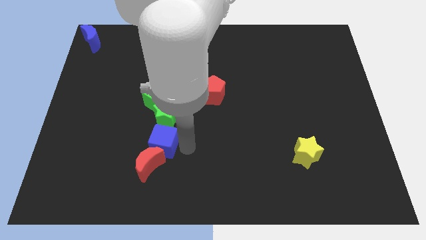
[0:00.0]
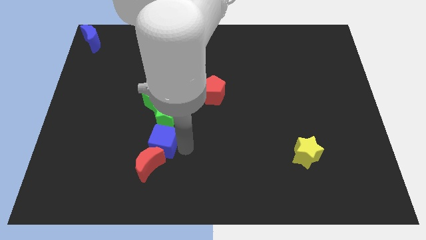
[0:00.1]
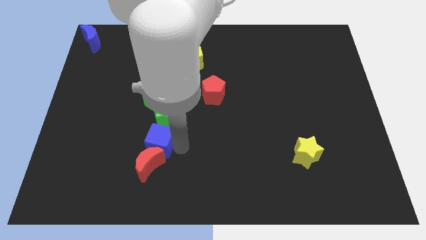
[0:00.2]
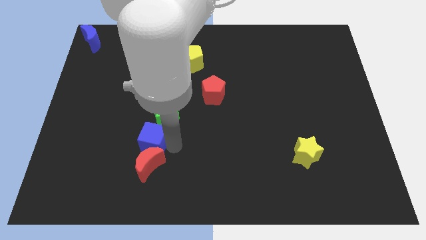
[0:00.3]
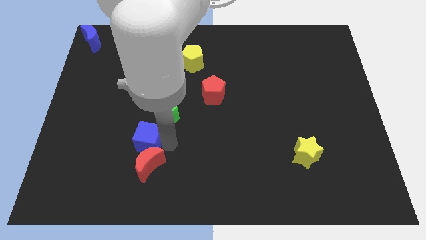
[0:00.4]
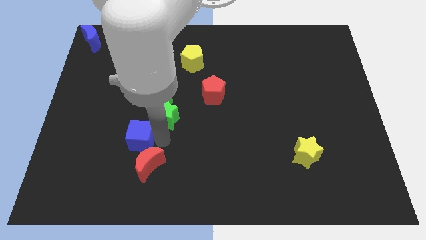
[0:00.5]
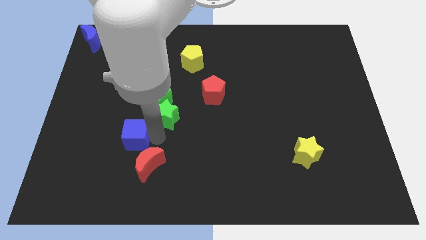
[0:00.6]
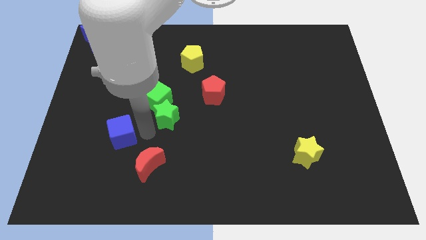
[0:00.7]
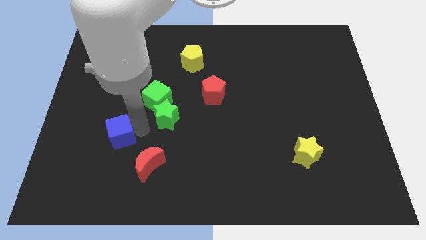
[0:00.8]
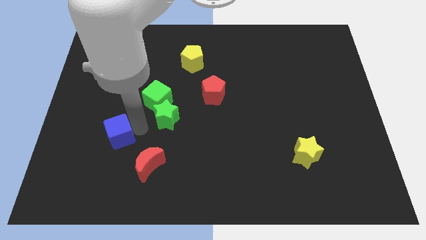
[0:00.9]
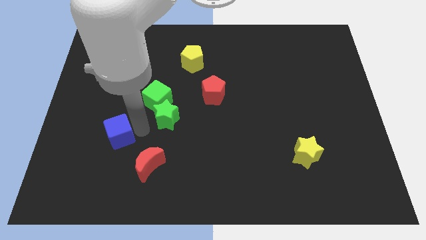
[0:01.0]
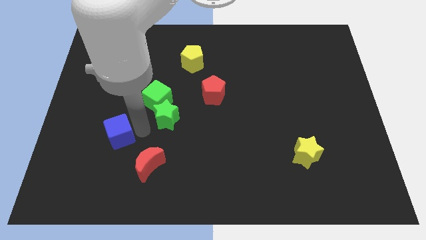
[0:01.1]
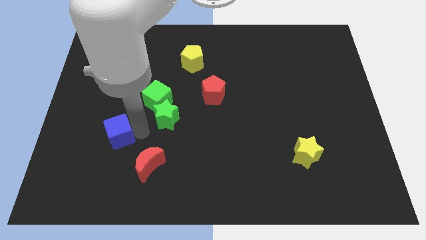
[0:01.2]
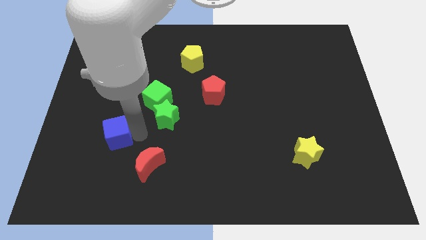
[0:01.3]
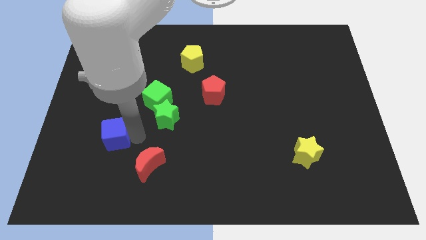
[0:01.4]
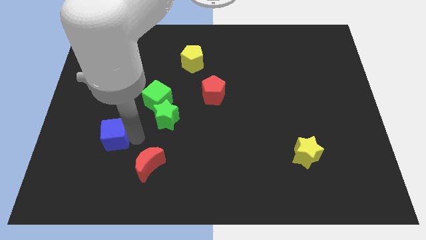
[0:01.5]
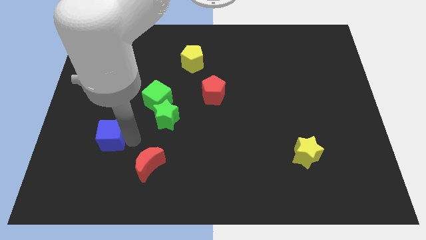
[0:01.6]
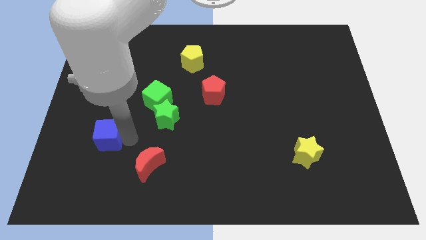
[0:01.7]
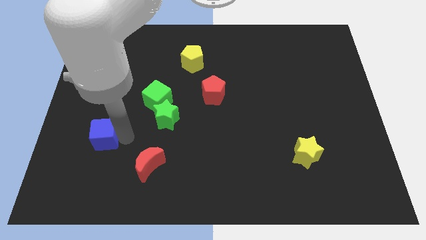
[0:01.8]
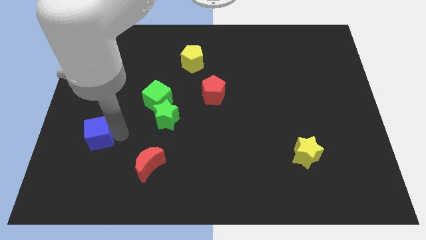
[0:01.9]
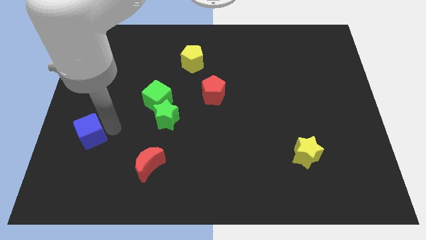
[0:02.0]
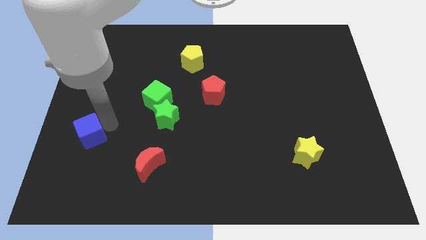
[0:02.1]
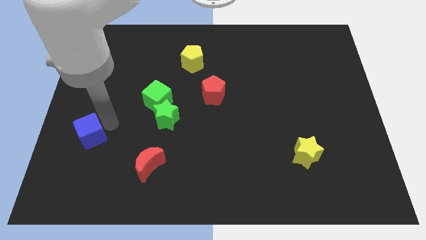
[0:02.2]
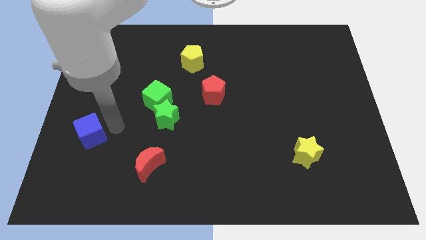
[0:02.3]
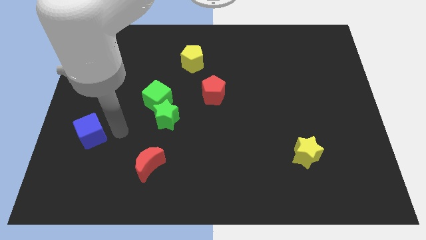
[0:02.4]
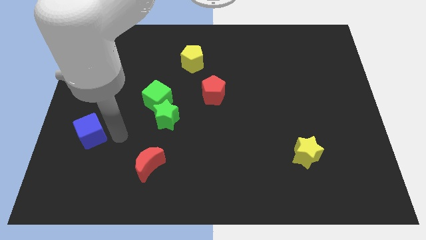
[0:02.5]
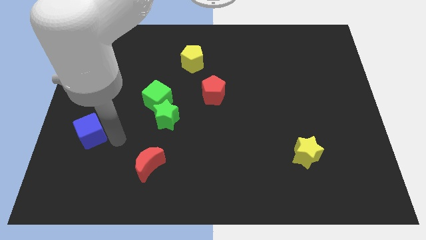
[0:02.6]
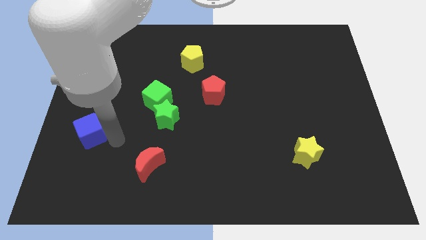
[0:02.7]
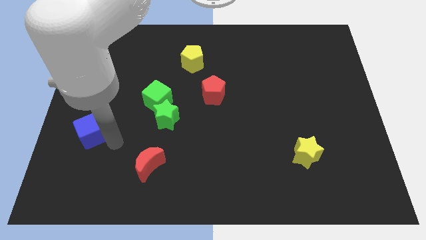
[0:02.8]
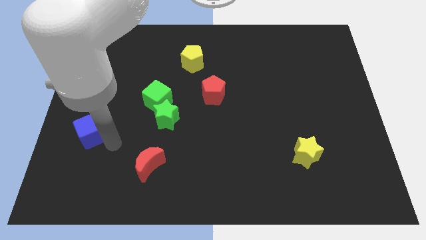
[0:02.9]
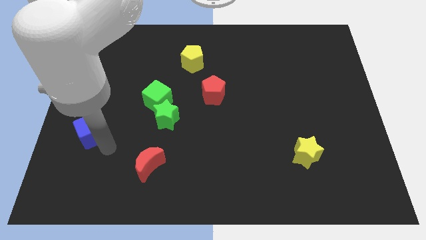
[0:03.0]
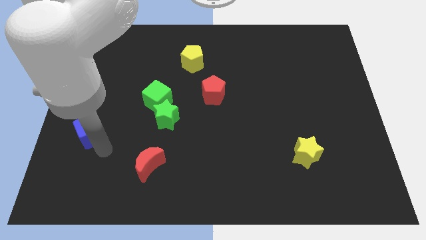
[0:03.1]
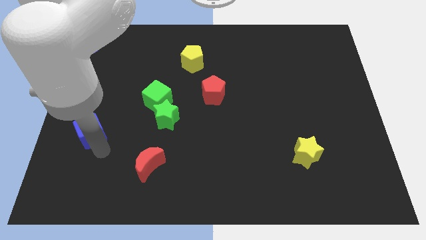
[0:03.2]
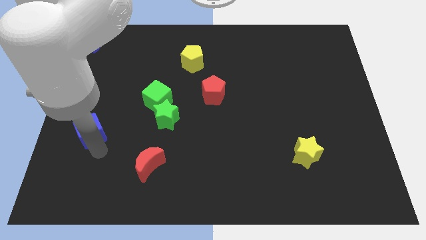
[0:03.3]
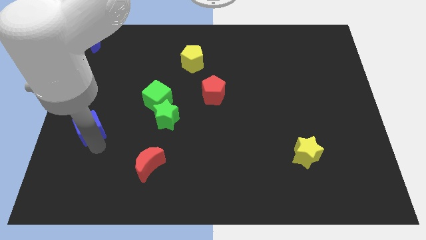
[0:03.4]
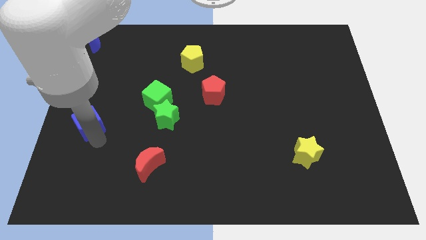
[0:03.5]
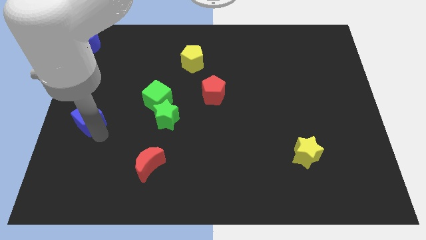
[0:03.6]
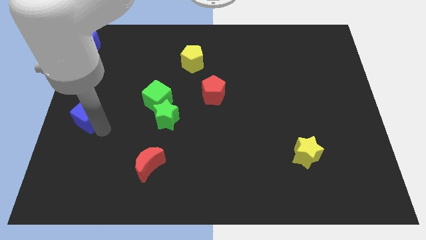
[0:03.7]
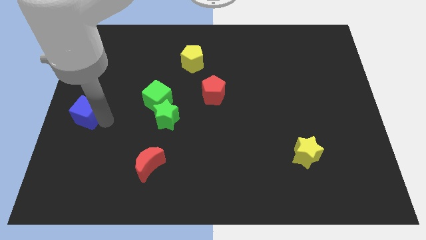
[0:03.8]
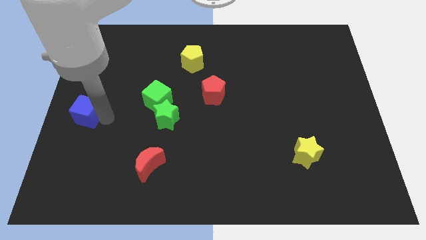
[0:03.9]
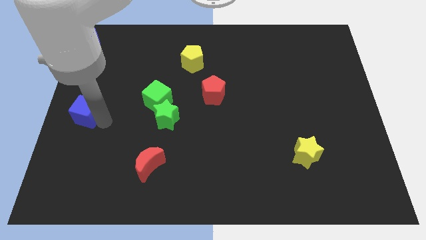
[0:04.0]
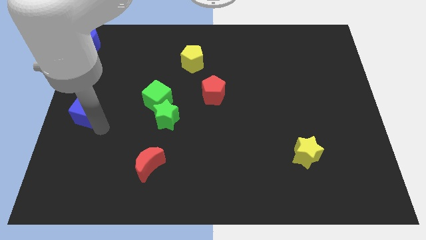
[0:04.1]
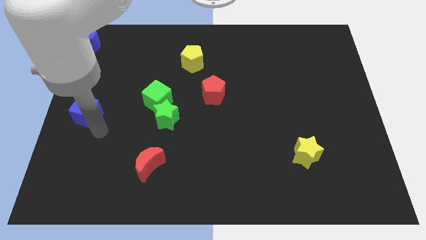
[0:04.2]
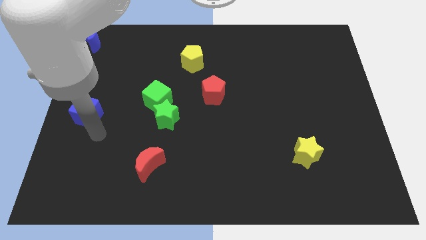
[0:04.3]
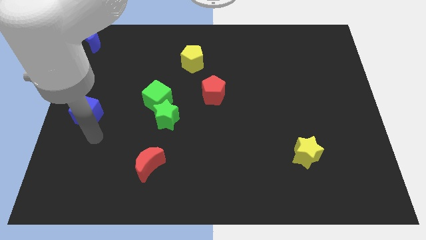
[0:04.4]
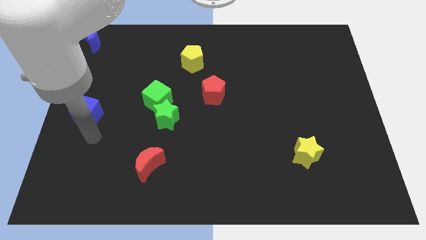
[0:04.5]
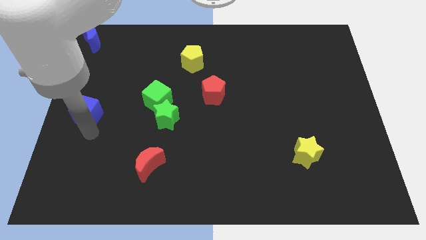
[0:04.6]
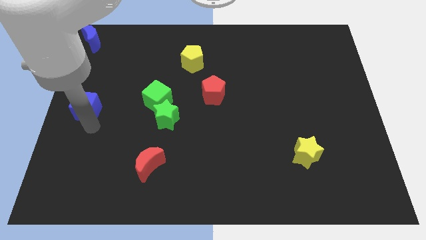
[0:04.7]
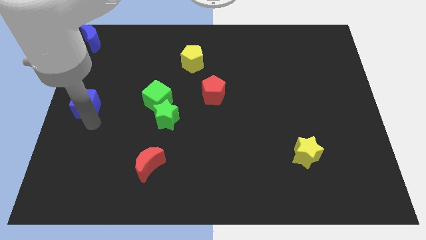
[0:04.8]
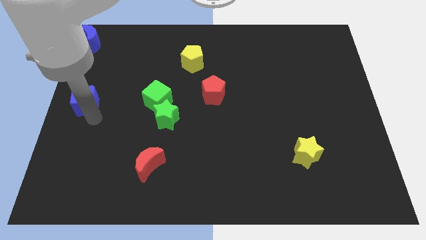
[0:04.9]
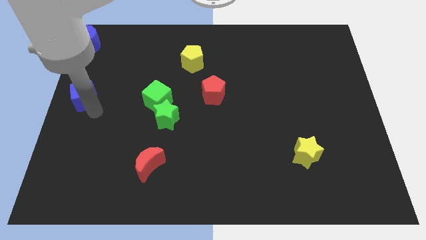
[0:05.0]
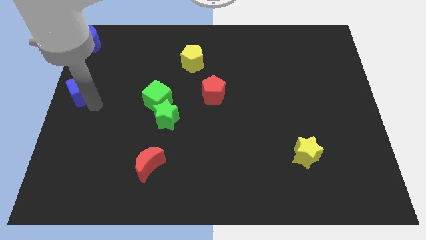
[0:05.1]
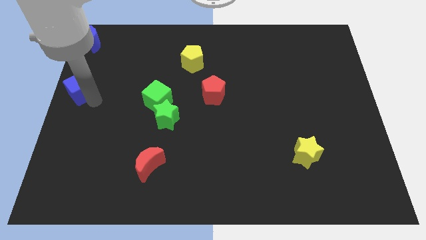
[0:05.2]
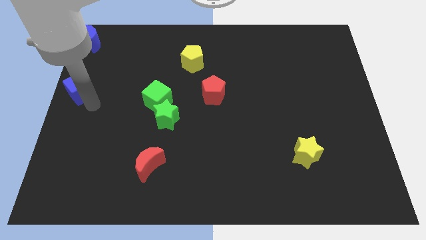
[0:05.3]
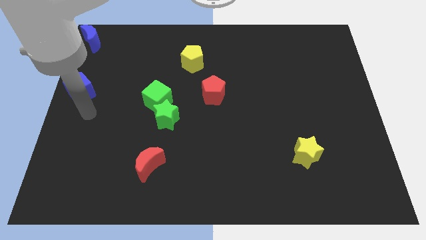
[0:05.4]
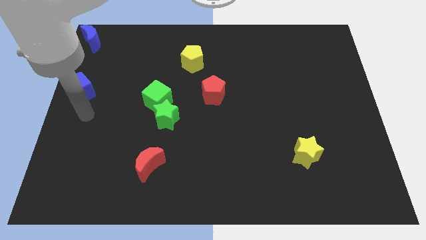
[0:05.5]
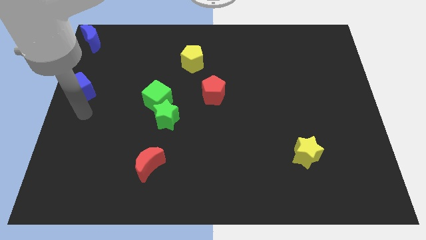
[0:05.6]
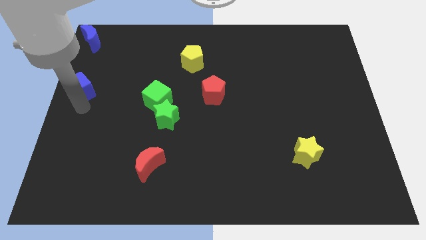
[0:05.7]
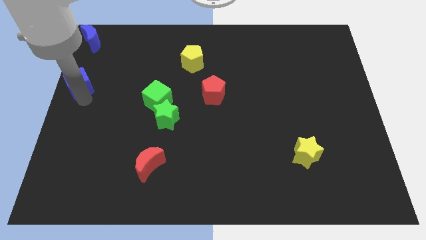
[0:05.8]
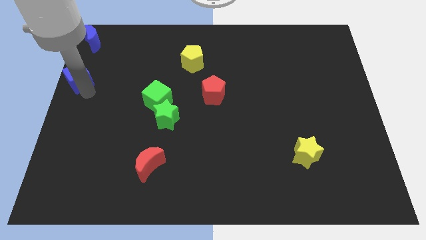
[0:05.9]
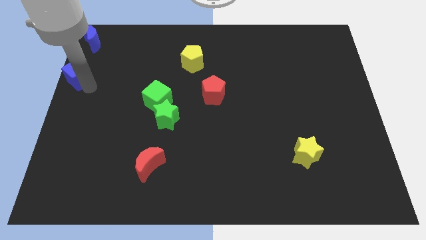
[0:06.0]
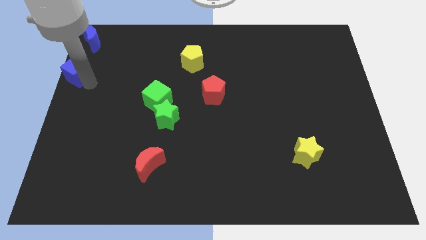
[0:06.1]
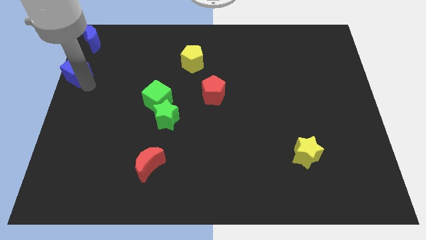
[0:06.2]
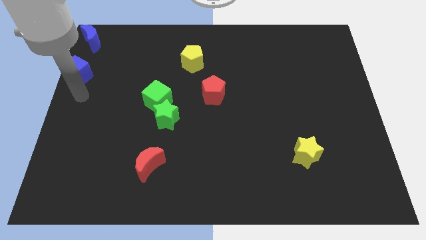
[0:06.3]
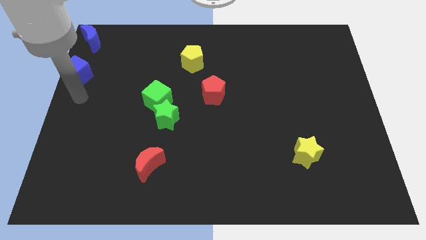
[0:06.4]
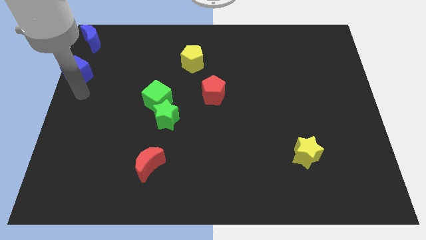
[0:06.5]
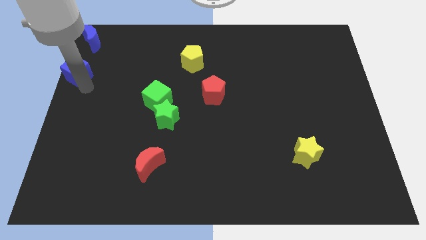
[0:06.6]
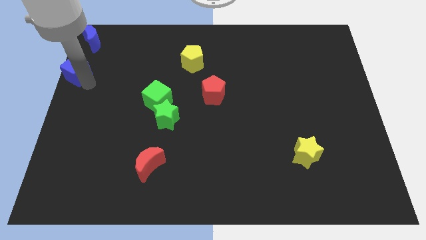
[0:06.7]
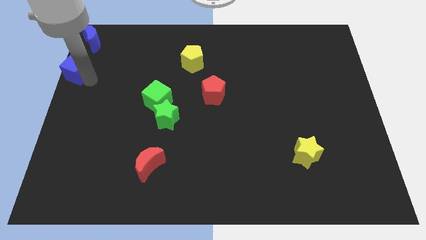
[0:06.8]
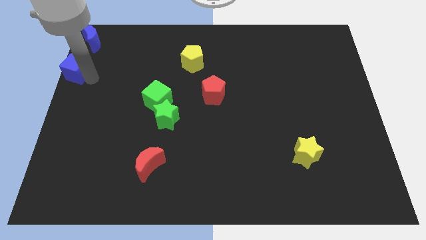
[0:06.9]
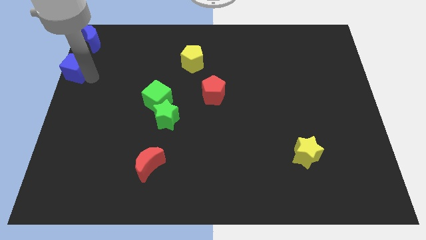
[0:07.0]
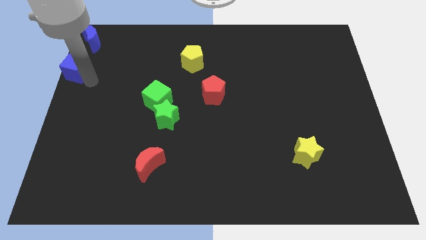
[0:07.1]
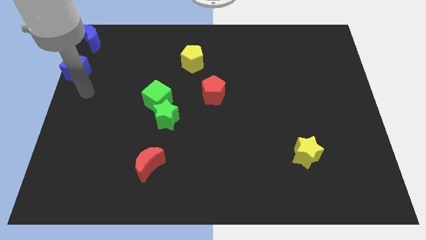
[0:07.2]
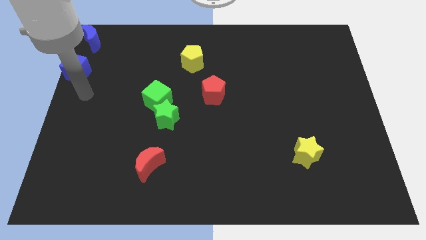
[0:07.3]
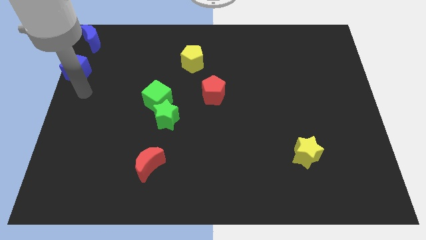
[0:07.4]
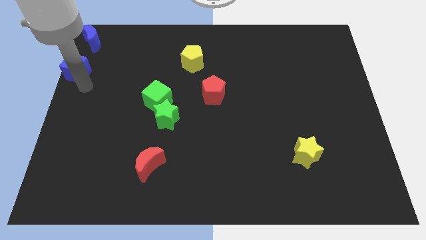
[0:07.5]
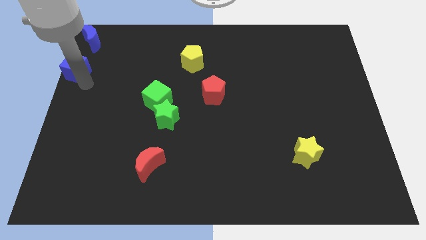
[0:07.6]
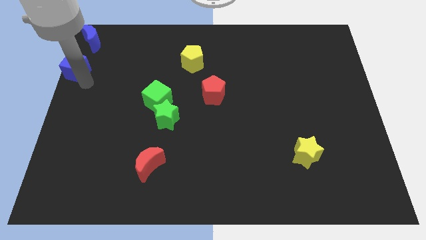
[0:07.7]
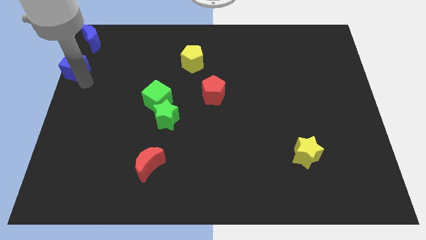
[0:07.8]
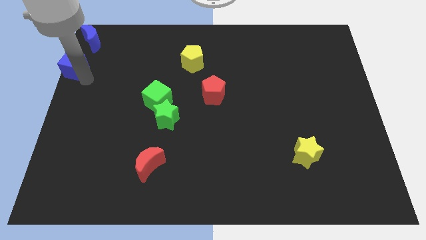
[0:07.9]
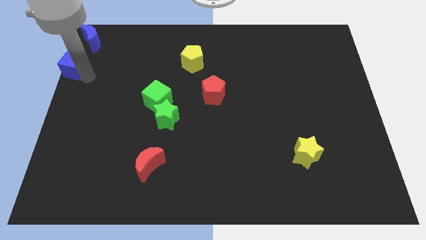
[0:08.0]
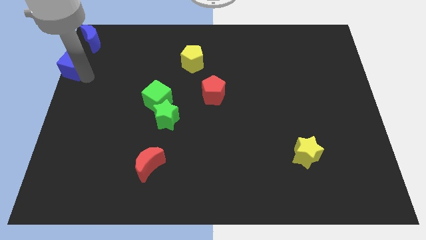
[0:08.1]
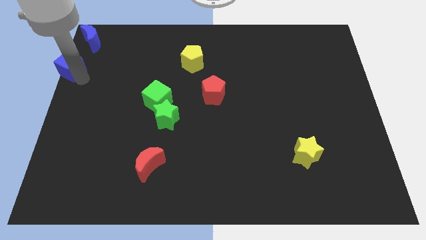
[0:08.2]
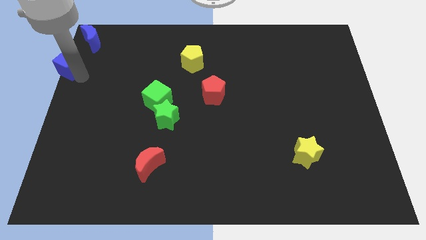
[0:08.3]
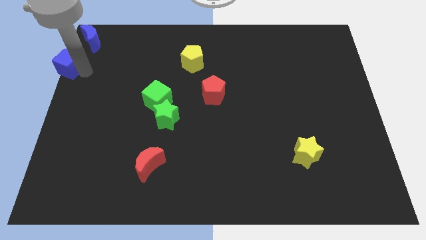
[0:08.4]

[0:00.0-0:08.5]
place the blue cube below the blue moon

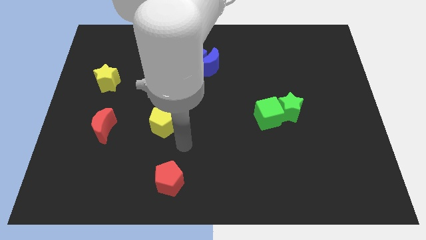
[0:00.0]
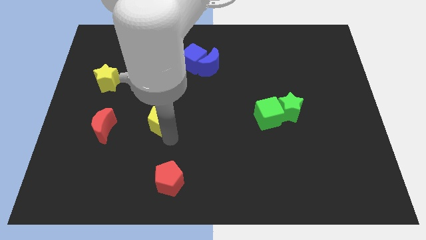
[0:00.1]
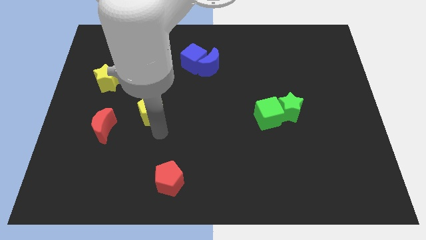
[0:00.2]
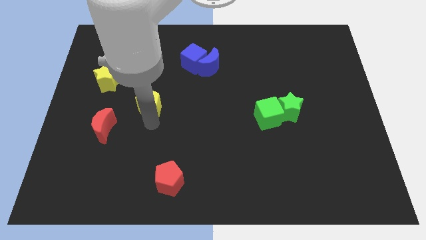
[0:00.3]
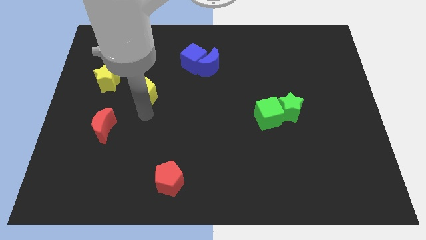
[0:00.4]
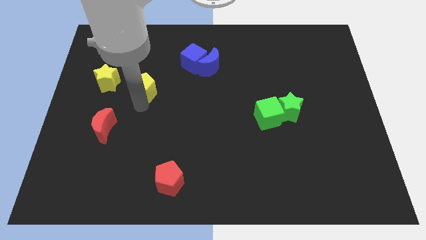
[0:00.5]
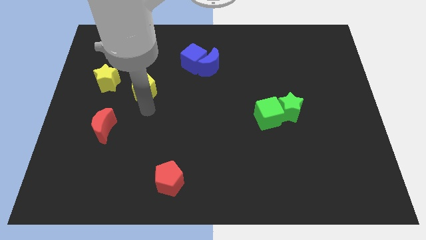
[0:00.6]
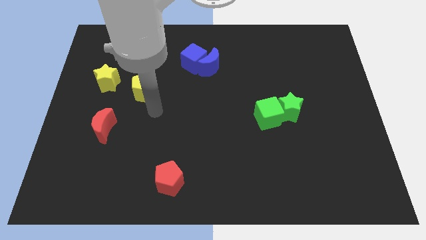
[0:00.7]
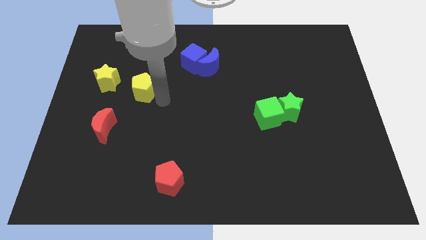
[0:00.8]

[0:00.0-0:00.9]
push yellow pentagon slightly towards upwards
